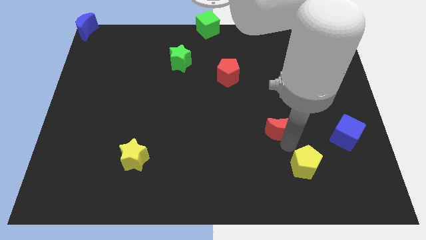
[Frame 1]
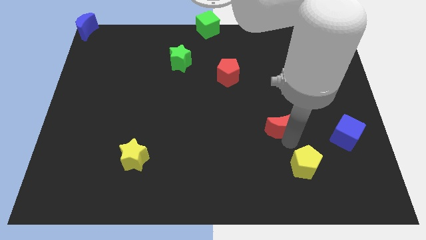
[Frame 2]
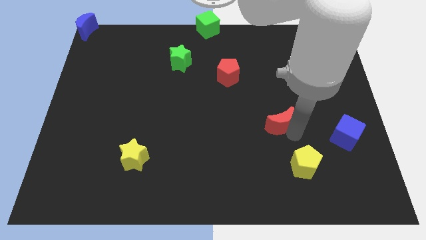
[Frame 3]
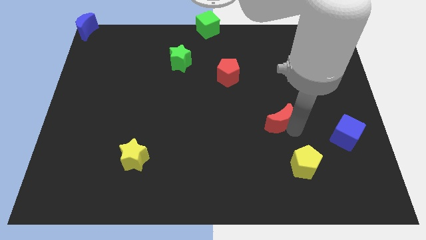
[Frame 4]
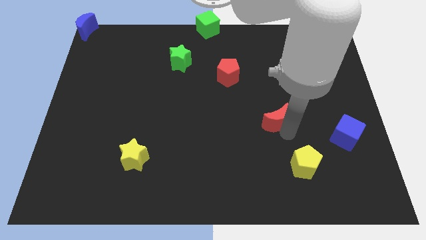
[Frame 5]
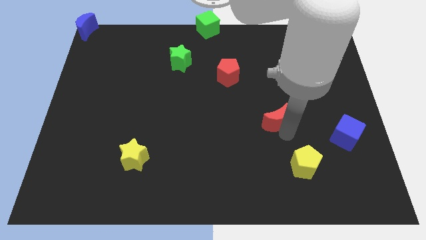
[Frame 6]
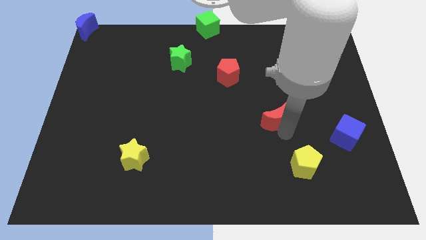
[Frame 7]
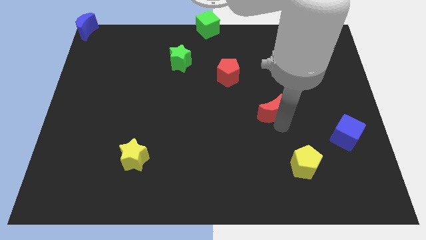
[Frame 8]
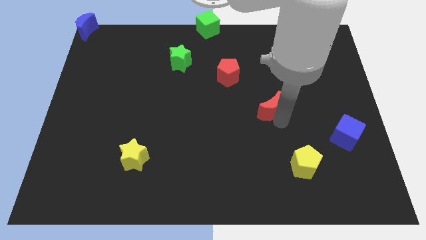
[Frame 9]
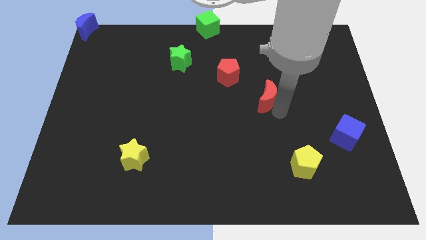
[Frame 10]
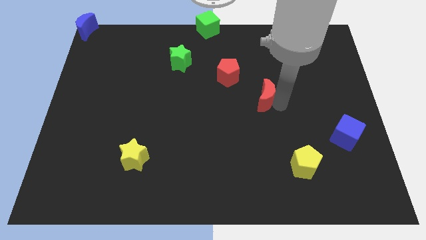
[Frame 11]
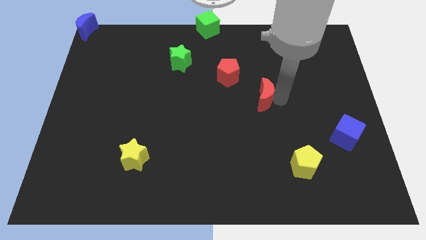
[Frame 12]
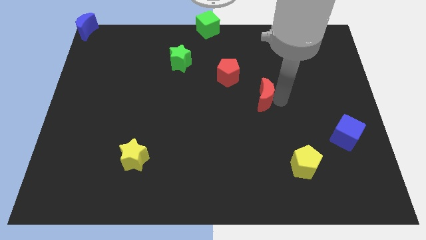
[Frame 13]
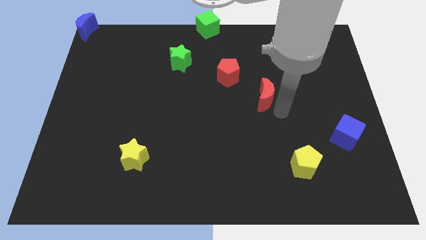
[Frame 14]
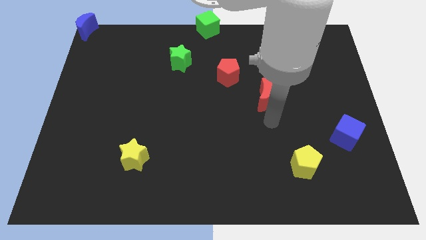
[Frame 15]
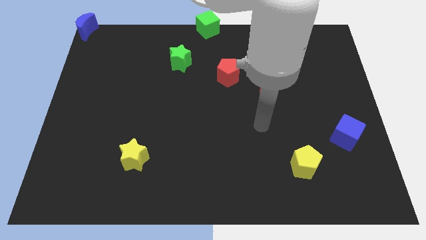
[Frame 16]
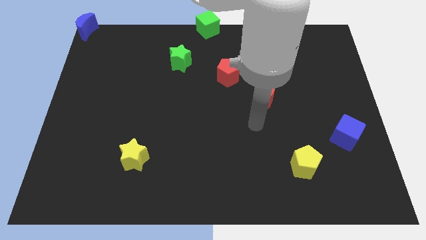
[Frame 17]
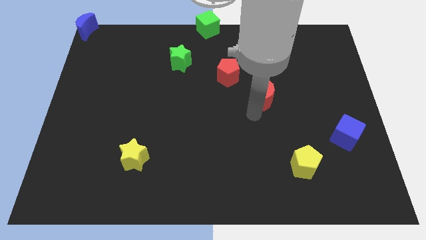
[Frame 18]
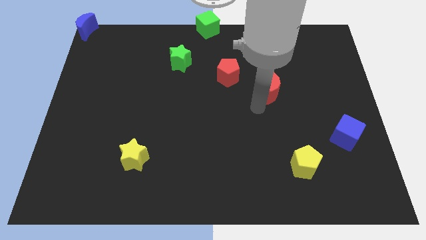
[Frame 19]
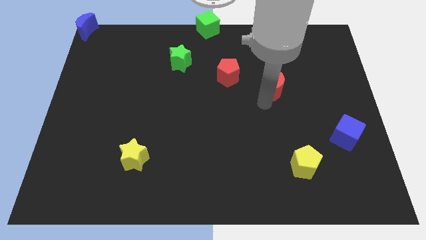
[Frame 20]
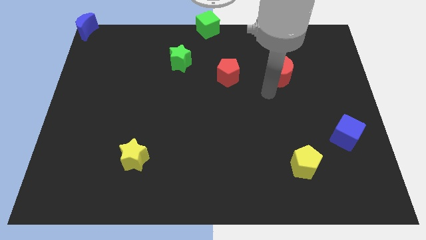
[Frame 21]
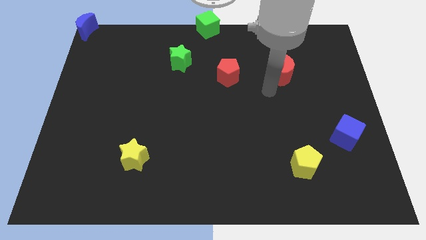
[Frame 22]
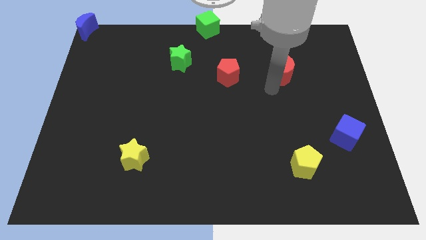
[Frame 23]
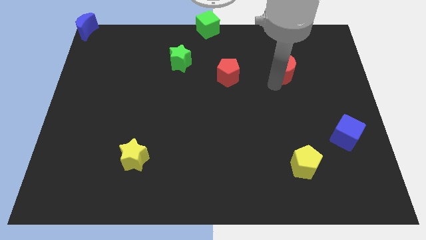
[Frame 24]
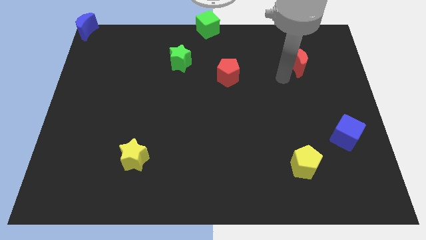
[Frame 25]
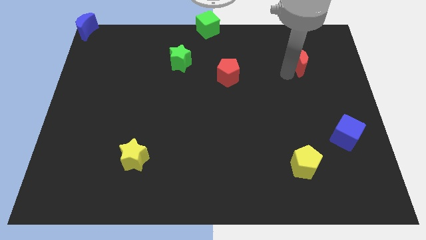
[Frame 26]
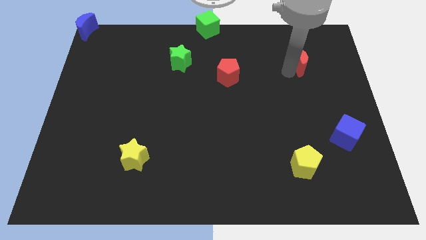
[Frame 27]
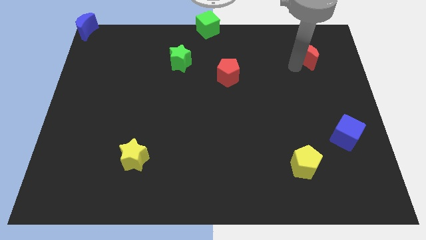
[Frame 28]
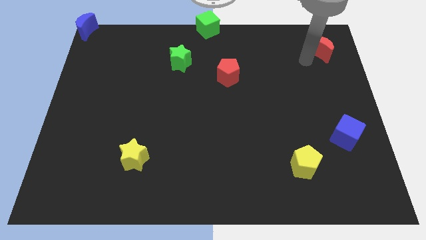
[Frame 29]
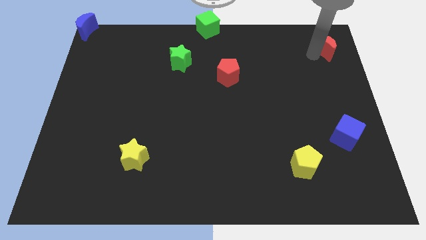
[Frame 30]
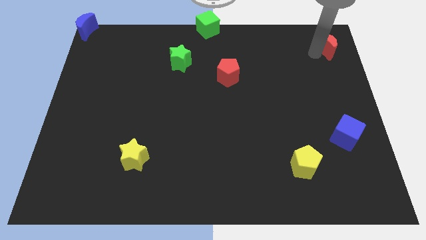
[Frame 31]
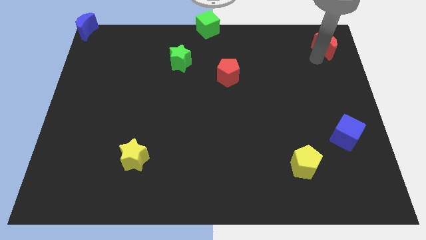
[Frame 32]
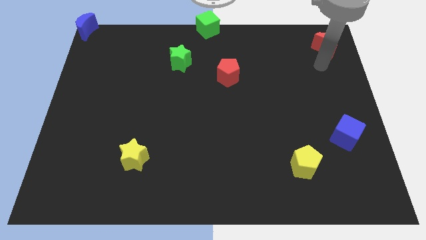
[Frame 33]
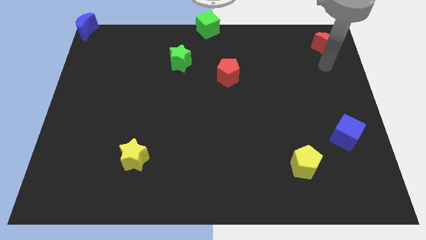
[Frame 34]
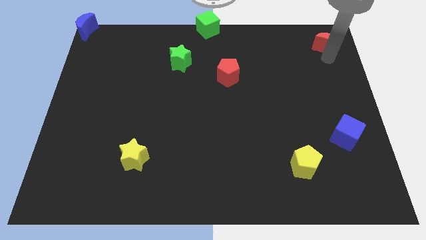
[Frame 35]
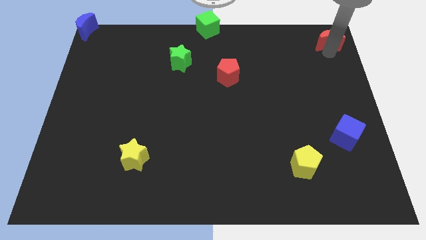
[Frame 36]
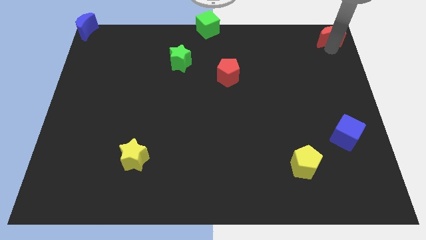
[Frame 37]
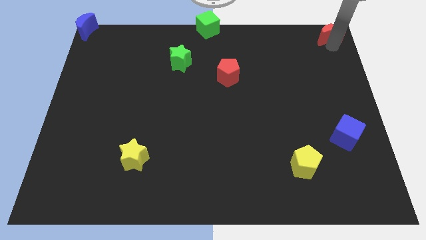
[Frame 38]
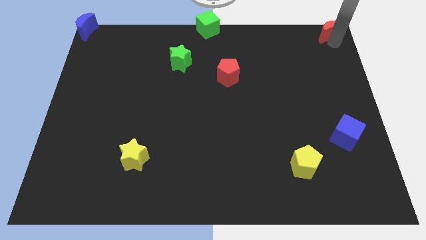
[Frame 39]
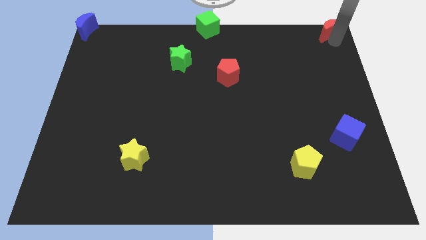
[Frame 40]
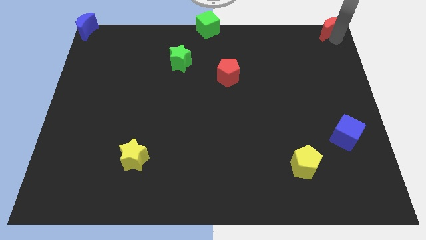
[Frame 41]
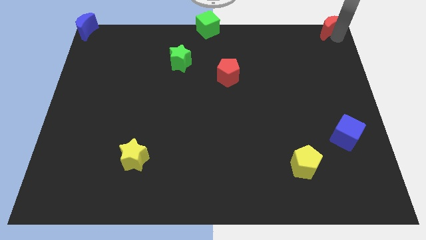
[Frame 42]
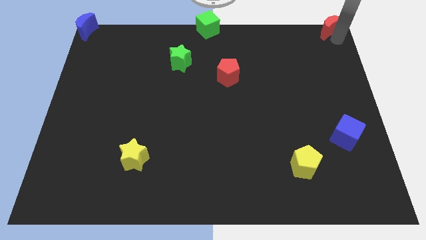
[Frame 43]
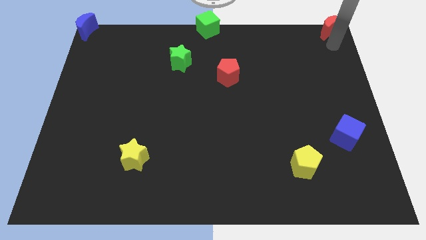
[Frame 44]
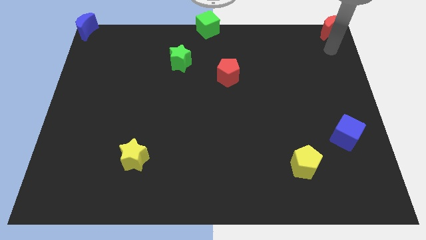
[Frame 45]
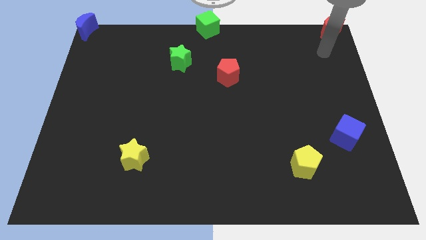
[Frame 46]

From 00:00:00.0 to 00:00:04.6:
move the red crescent to the top right corner of the board

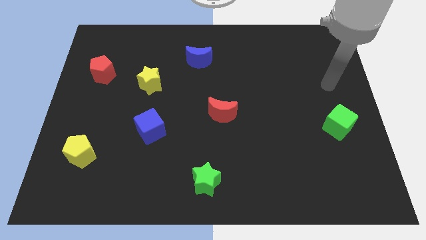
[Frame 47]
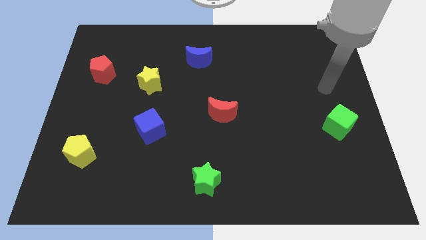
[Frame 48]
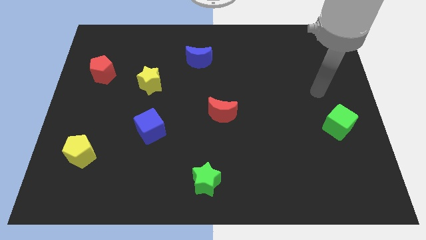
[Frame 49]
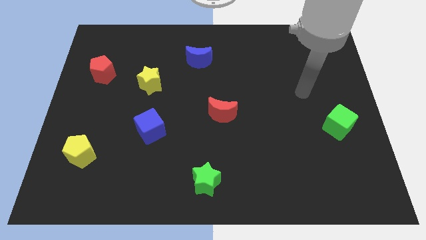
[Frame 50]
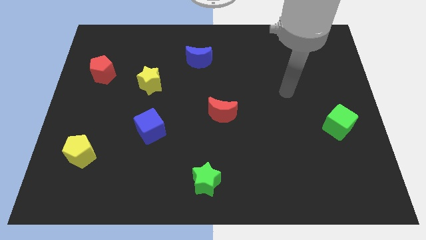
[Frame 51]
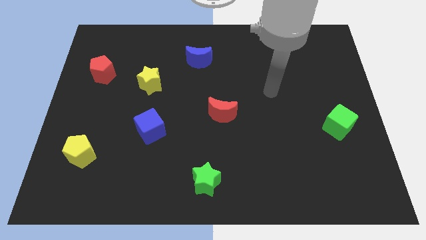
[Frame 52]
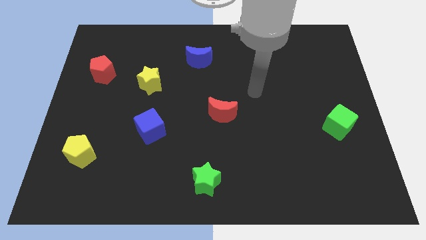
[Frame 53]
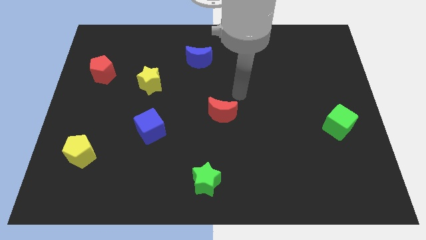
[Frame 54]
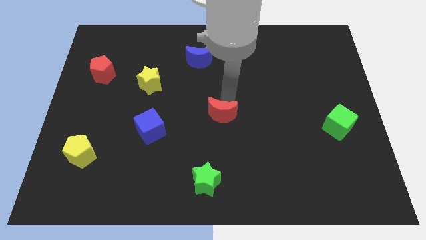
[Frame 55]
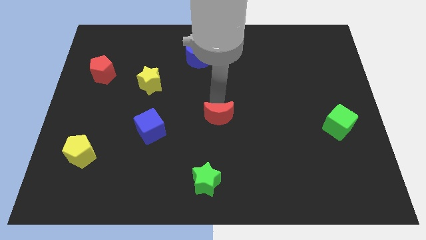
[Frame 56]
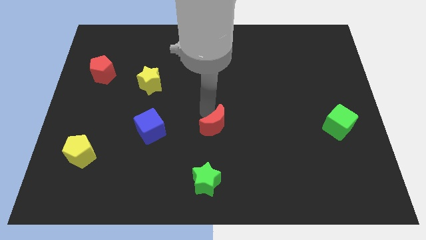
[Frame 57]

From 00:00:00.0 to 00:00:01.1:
touch your arm on top left of red moon

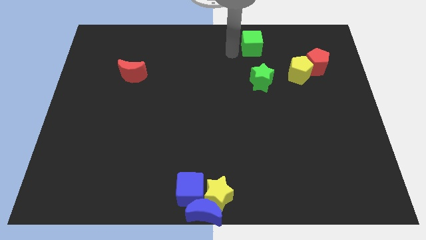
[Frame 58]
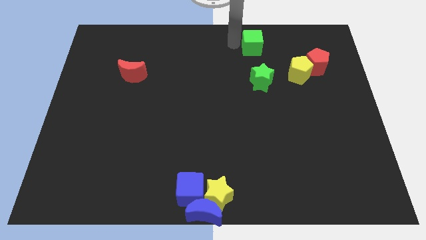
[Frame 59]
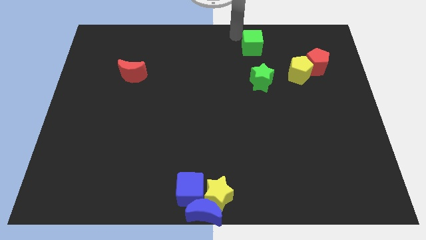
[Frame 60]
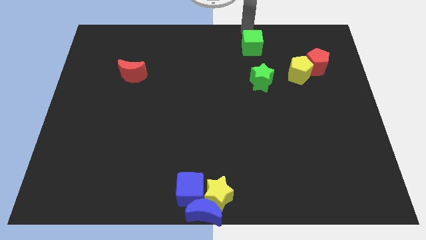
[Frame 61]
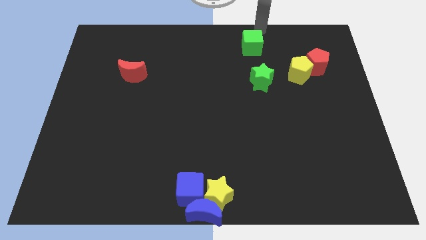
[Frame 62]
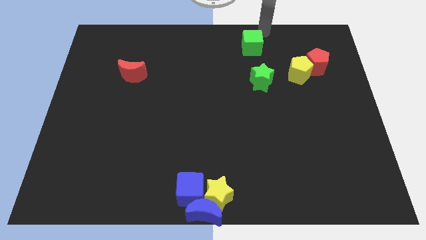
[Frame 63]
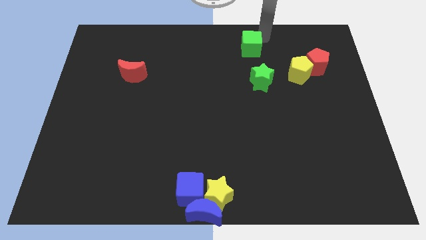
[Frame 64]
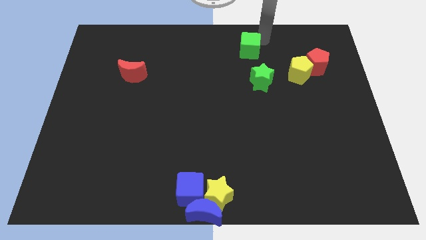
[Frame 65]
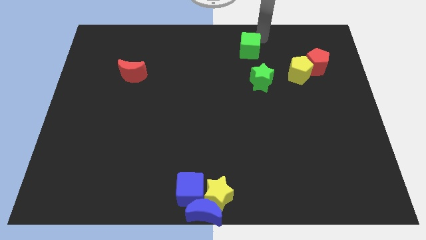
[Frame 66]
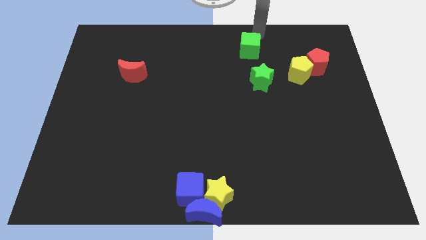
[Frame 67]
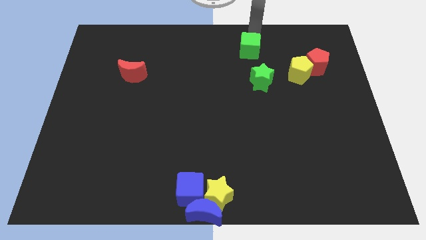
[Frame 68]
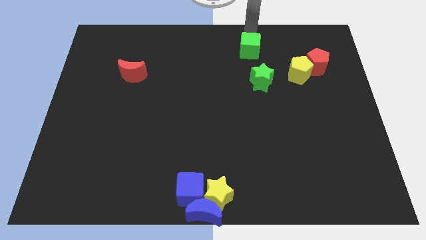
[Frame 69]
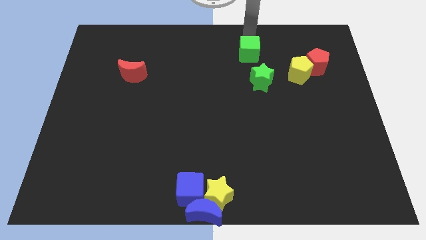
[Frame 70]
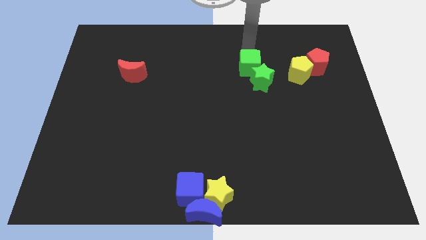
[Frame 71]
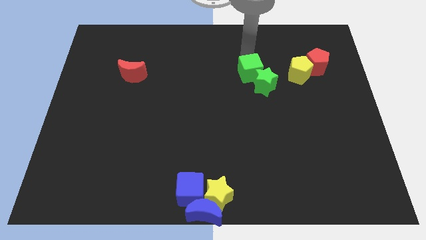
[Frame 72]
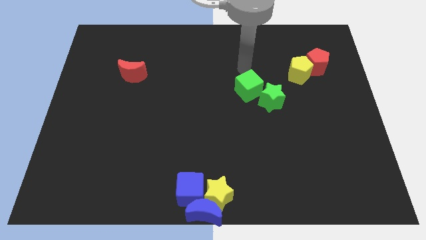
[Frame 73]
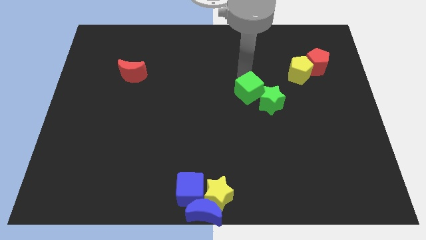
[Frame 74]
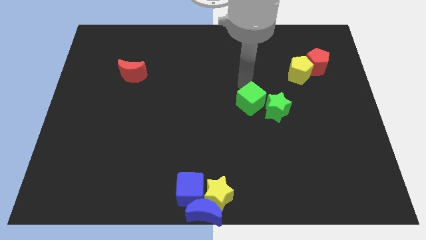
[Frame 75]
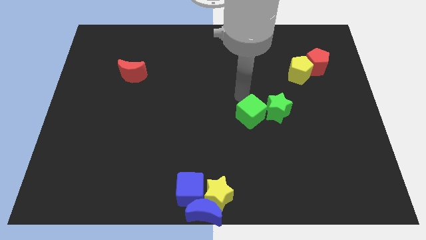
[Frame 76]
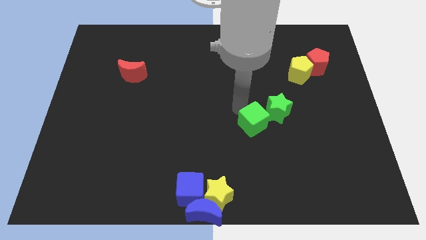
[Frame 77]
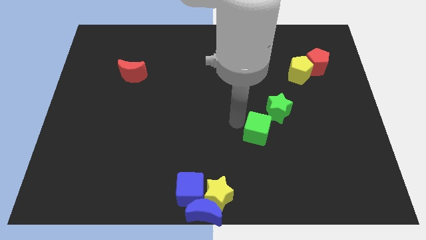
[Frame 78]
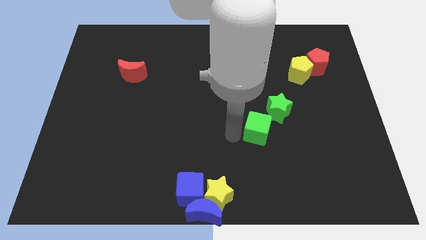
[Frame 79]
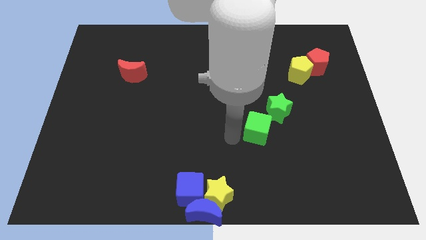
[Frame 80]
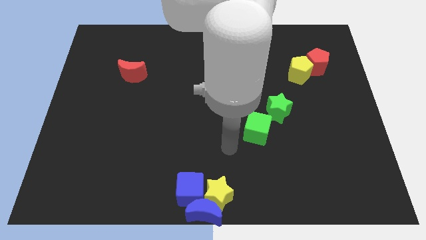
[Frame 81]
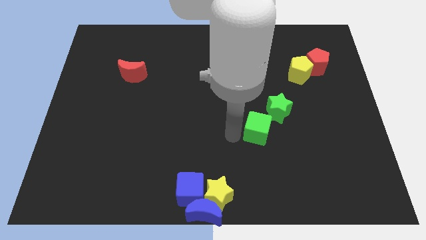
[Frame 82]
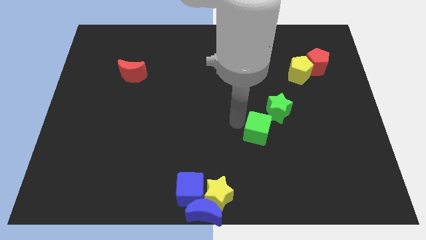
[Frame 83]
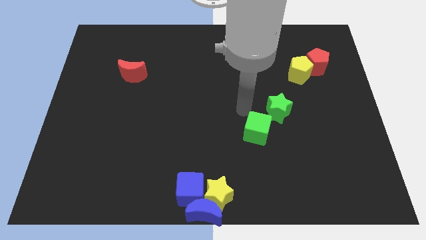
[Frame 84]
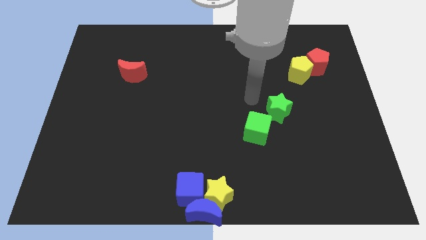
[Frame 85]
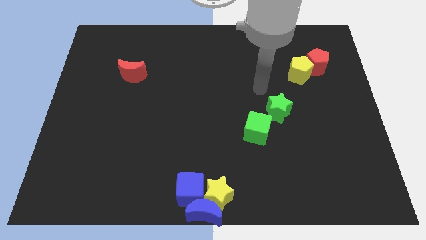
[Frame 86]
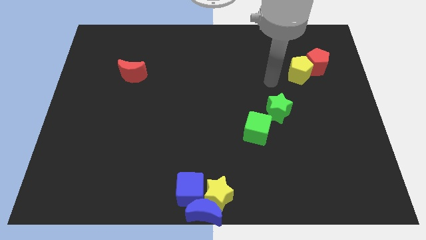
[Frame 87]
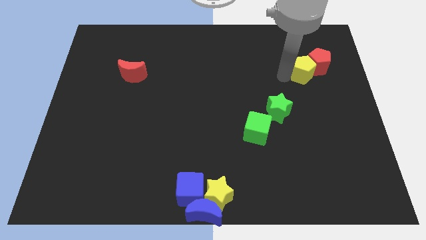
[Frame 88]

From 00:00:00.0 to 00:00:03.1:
move the green blocks towards the yellow star

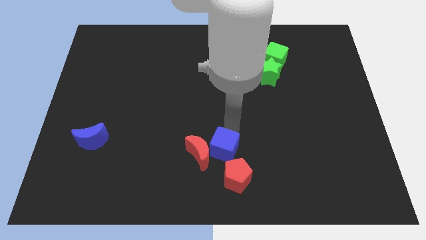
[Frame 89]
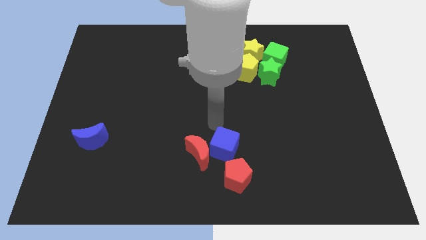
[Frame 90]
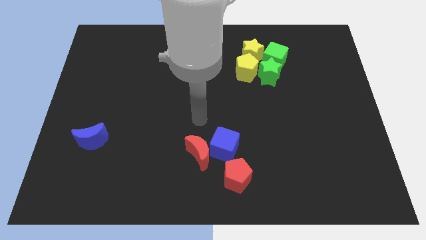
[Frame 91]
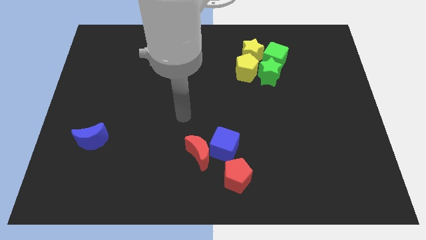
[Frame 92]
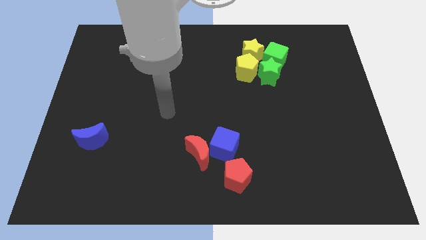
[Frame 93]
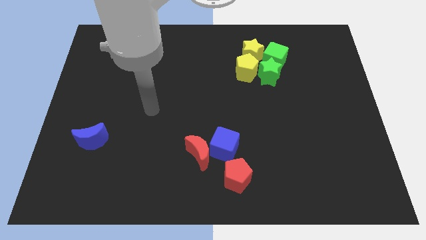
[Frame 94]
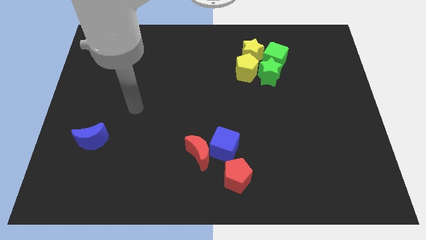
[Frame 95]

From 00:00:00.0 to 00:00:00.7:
go away from the blue cube
